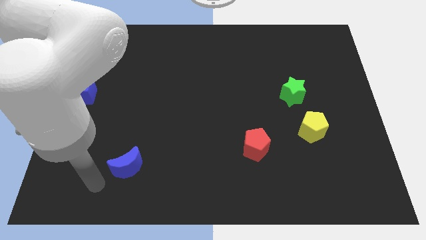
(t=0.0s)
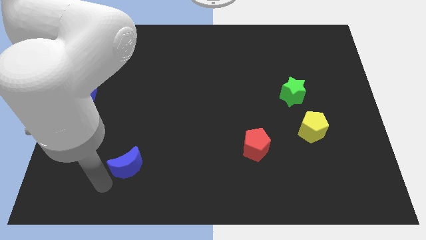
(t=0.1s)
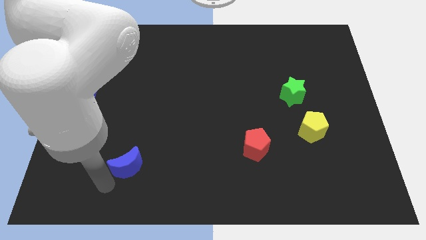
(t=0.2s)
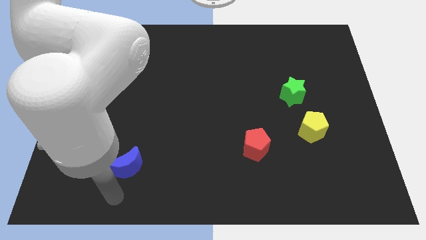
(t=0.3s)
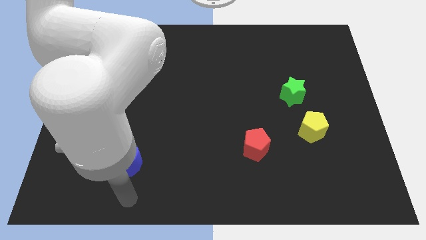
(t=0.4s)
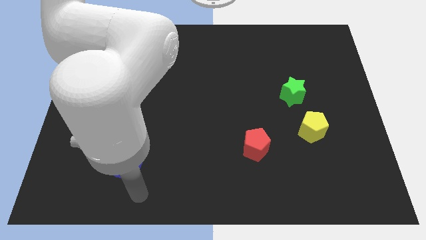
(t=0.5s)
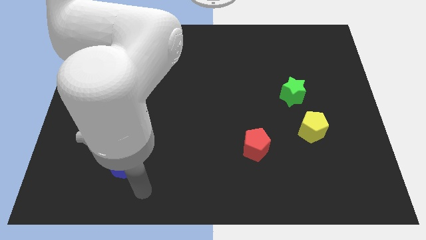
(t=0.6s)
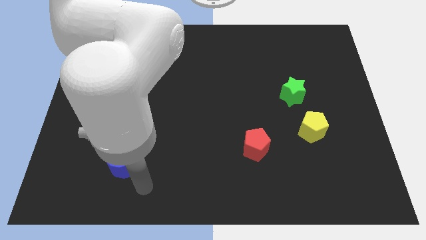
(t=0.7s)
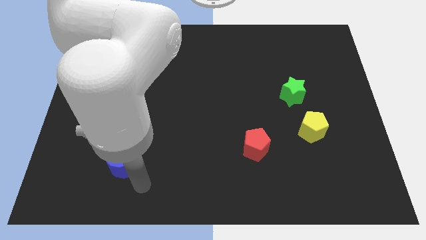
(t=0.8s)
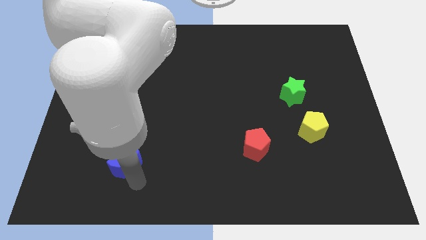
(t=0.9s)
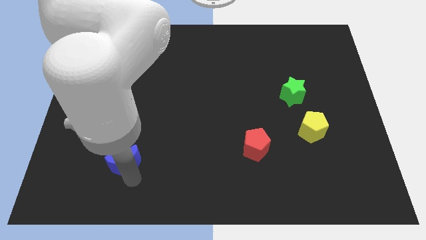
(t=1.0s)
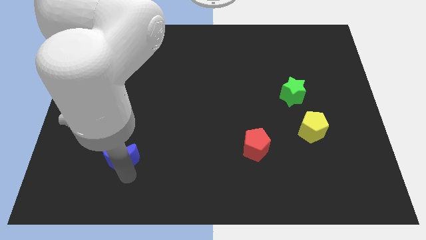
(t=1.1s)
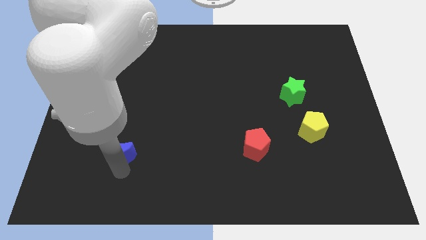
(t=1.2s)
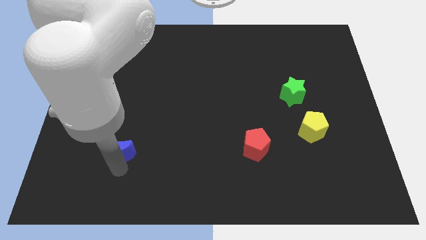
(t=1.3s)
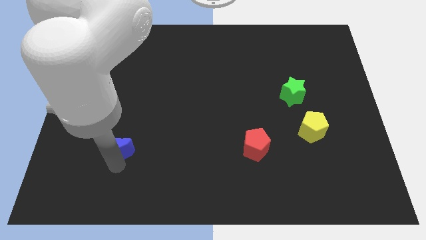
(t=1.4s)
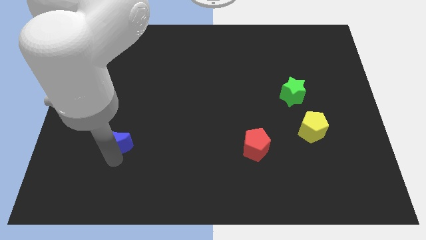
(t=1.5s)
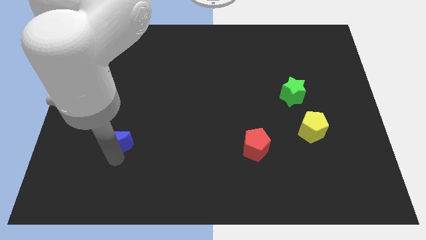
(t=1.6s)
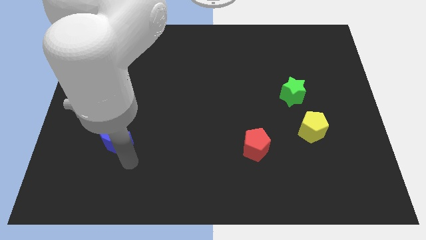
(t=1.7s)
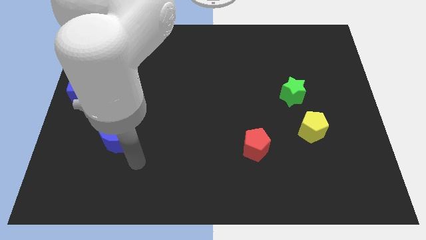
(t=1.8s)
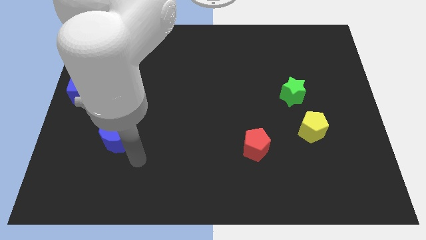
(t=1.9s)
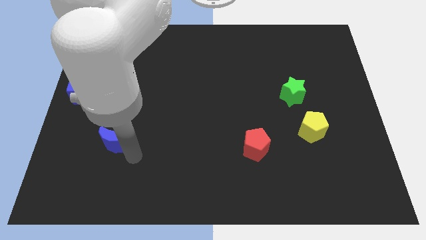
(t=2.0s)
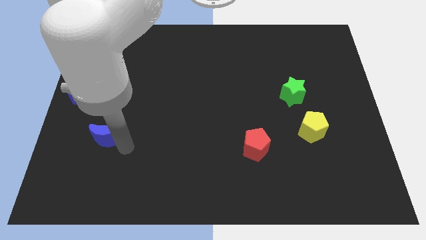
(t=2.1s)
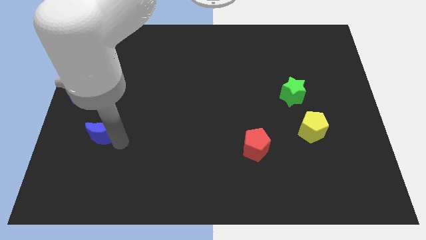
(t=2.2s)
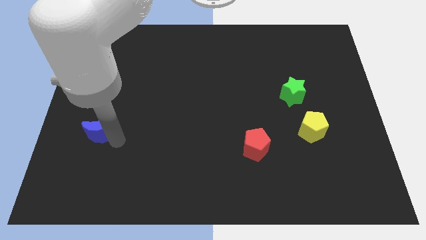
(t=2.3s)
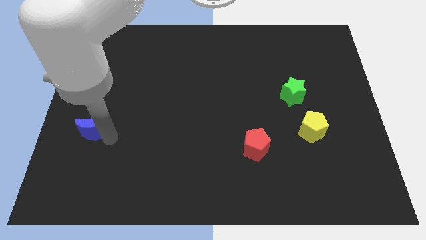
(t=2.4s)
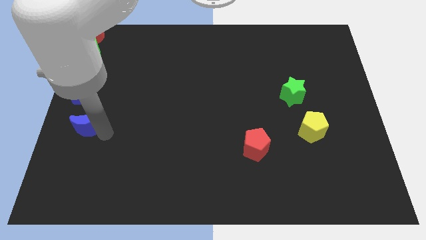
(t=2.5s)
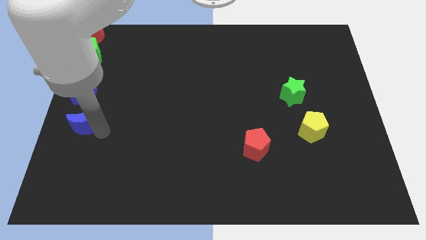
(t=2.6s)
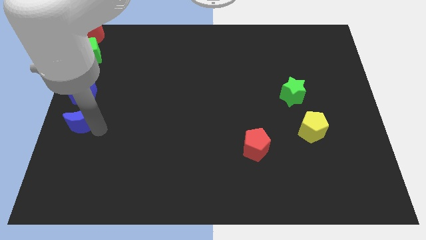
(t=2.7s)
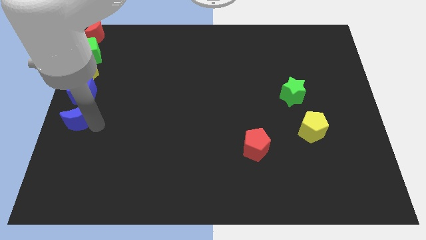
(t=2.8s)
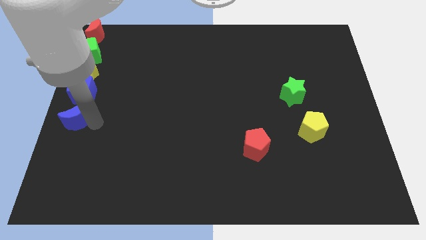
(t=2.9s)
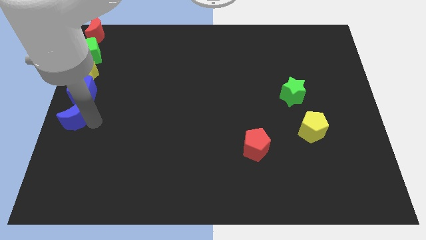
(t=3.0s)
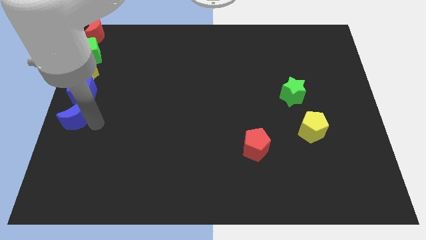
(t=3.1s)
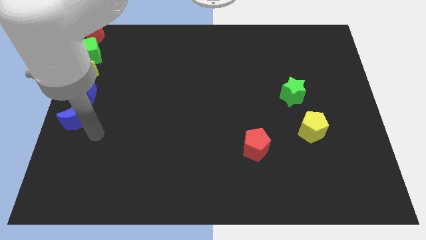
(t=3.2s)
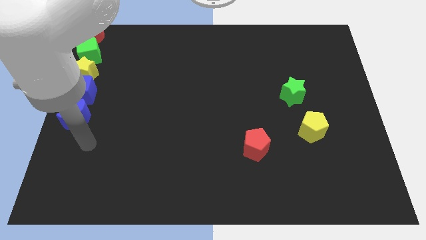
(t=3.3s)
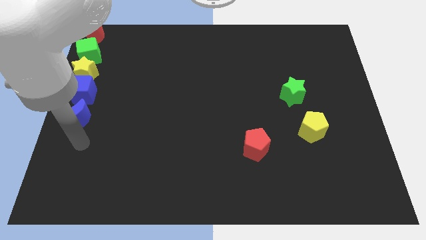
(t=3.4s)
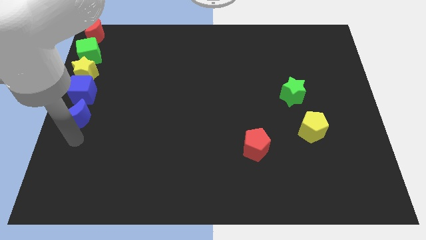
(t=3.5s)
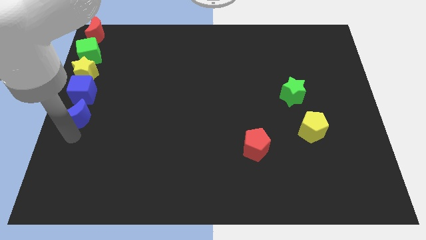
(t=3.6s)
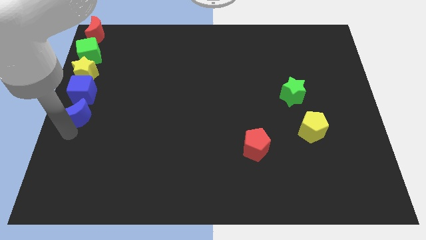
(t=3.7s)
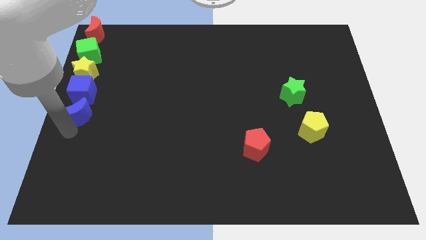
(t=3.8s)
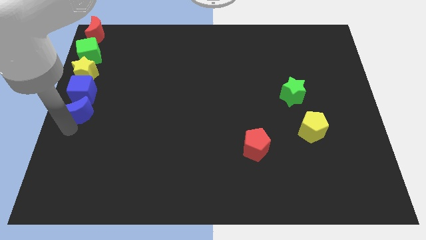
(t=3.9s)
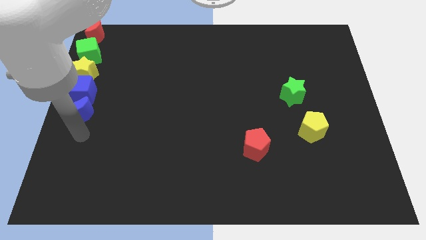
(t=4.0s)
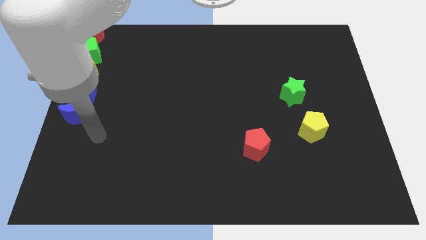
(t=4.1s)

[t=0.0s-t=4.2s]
place the blue moon below the blue cube

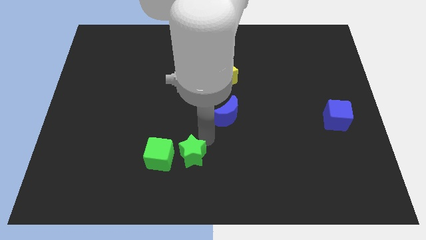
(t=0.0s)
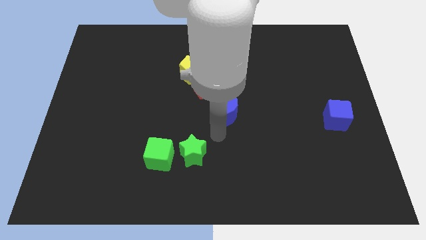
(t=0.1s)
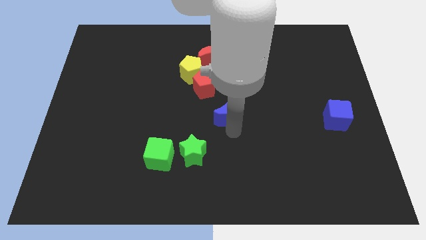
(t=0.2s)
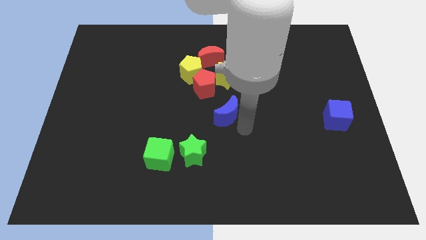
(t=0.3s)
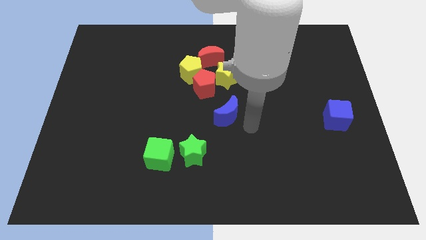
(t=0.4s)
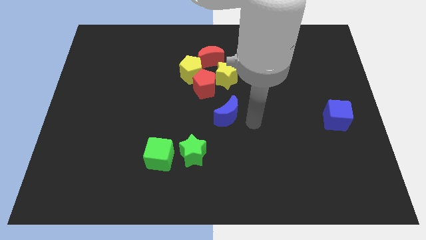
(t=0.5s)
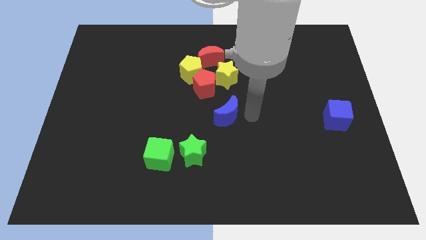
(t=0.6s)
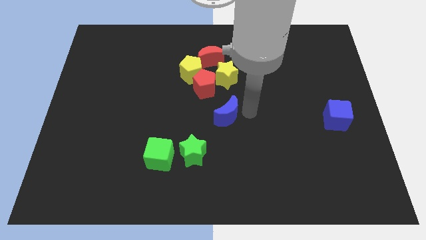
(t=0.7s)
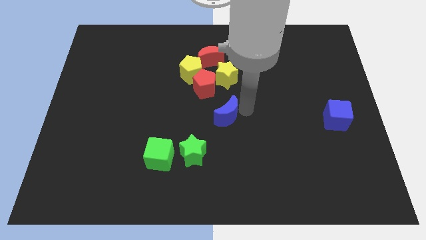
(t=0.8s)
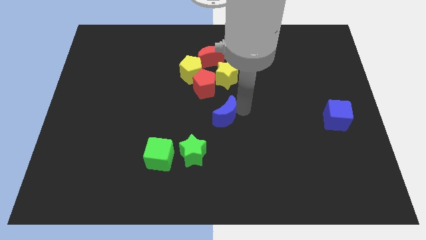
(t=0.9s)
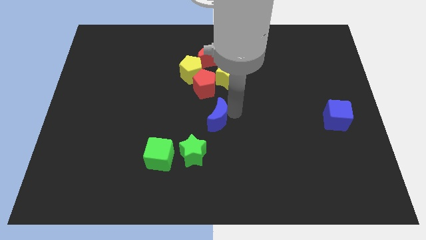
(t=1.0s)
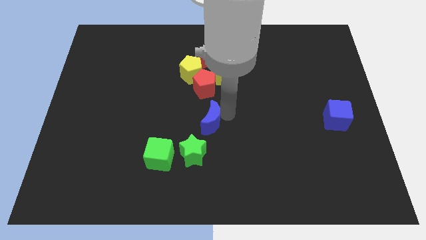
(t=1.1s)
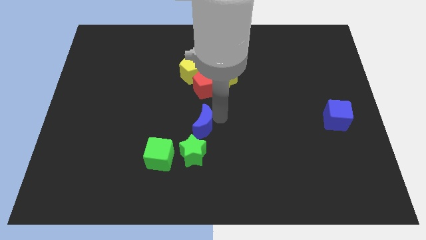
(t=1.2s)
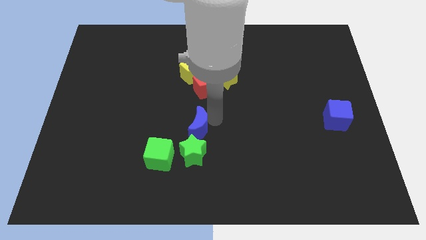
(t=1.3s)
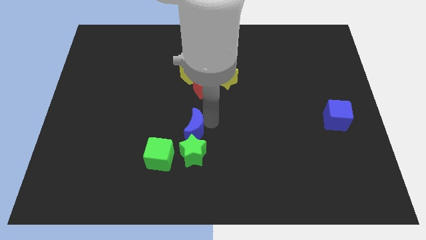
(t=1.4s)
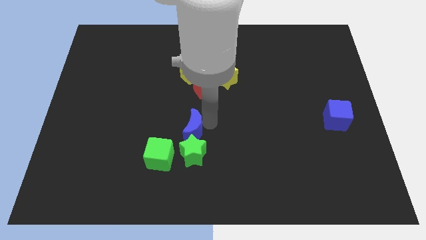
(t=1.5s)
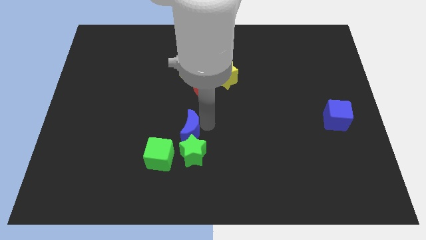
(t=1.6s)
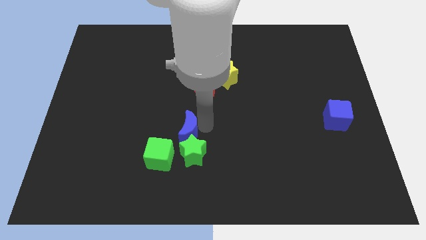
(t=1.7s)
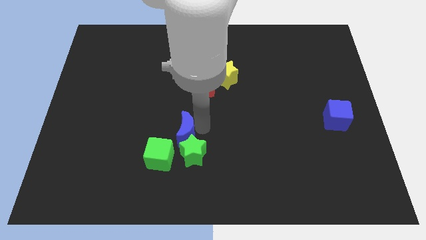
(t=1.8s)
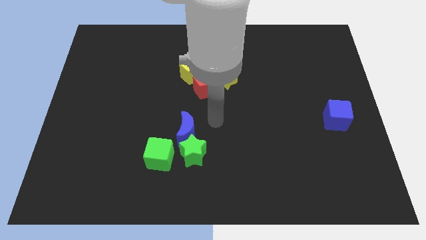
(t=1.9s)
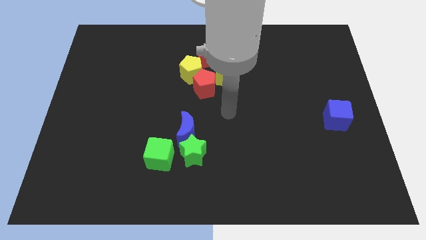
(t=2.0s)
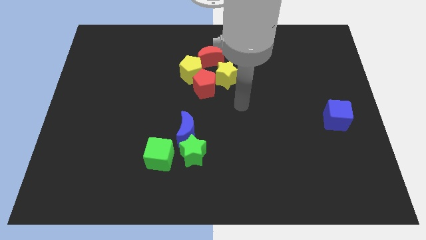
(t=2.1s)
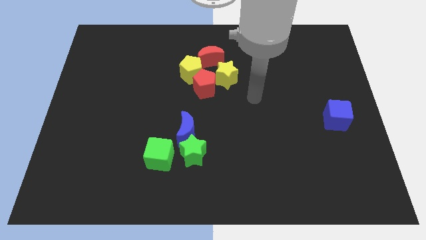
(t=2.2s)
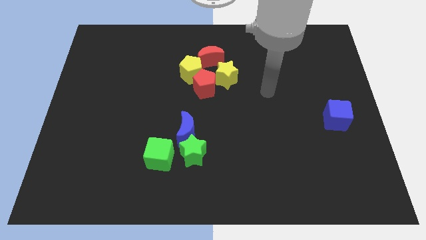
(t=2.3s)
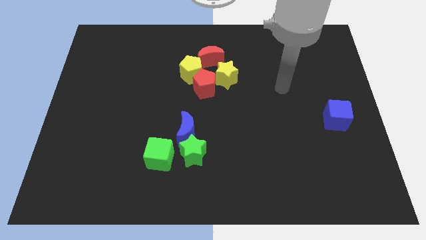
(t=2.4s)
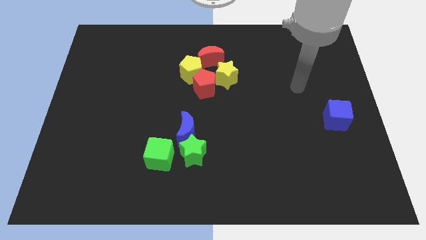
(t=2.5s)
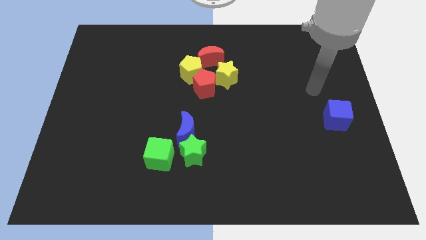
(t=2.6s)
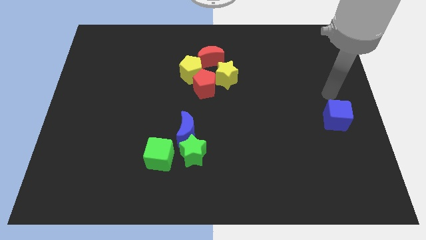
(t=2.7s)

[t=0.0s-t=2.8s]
drag the blue moon diagonally top left to green star

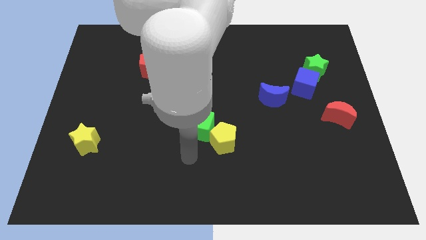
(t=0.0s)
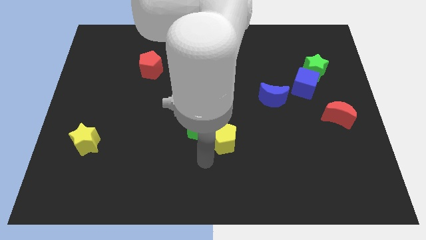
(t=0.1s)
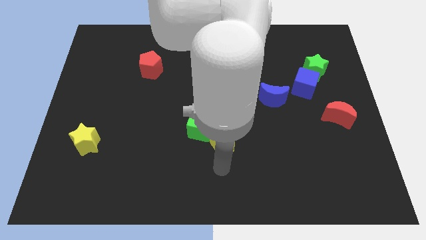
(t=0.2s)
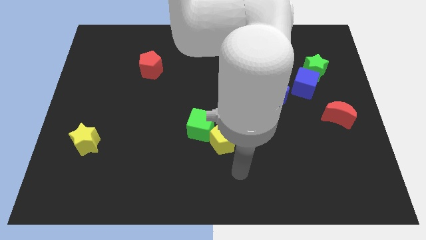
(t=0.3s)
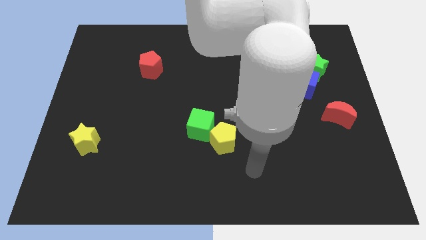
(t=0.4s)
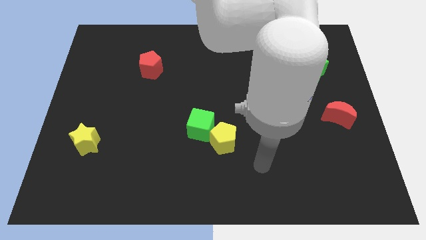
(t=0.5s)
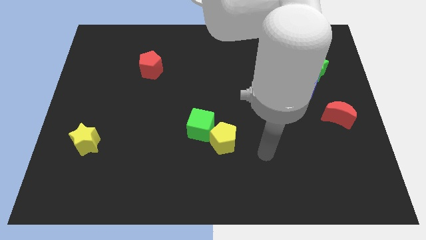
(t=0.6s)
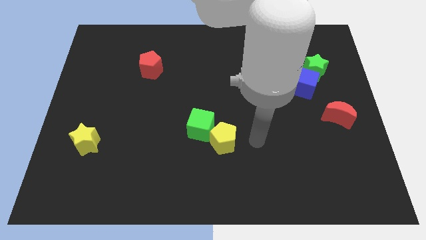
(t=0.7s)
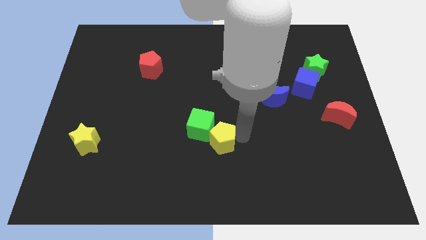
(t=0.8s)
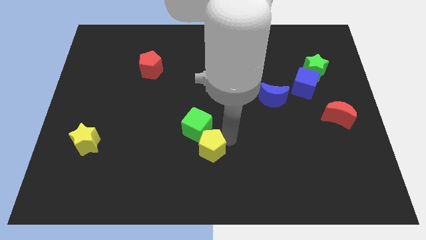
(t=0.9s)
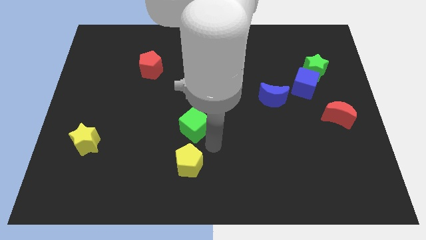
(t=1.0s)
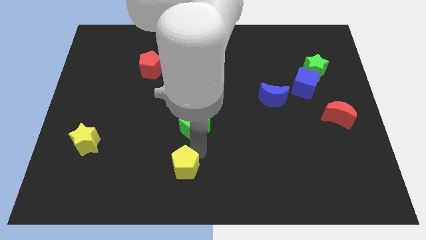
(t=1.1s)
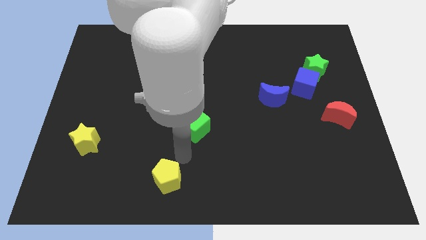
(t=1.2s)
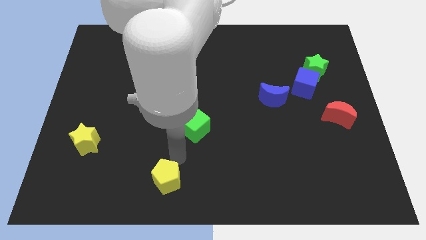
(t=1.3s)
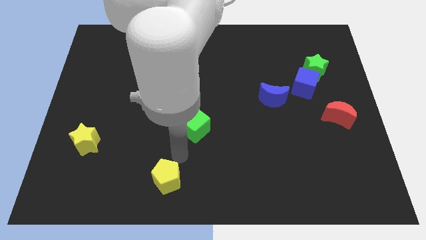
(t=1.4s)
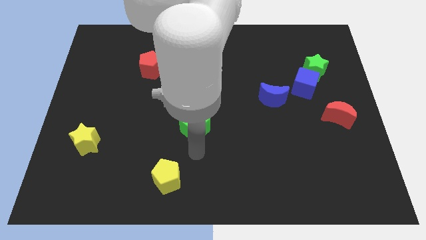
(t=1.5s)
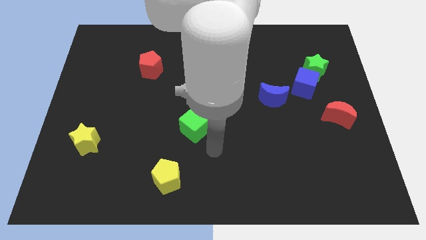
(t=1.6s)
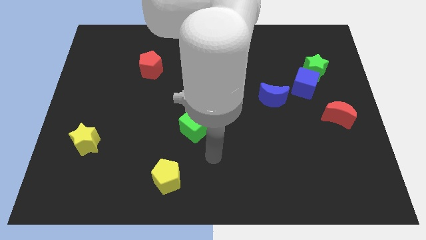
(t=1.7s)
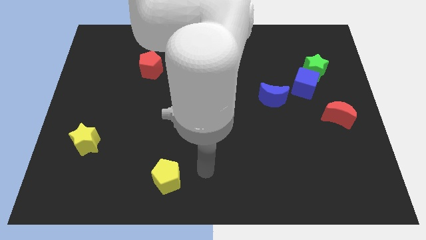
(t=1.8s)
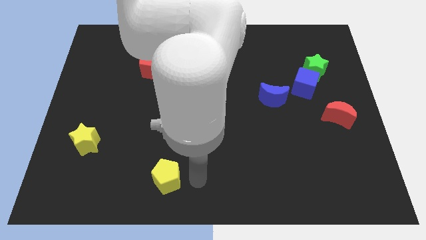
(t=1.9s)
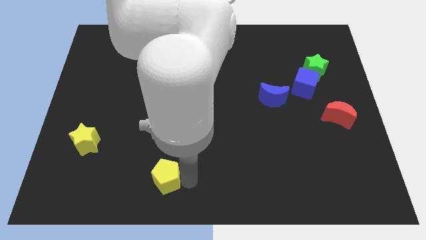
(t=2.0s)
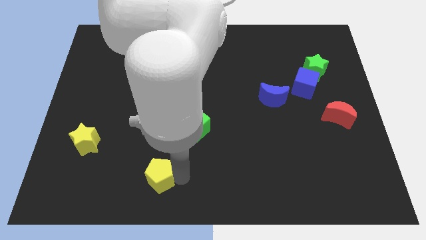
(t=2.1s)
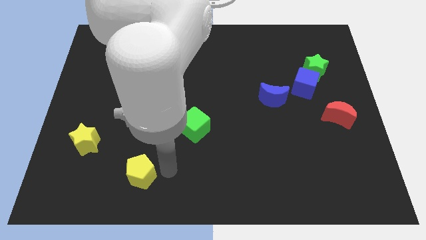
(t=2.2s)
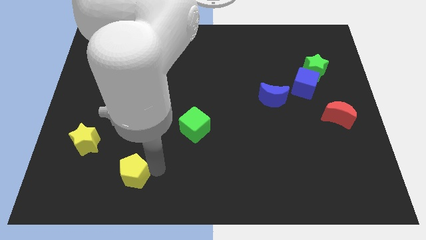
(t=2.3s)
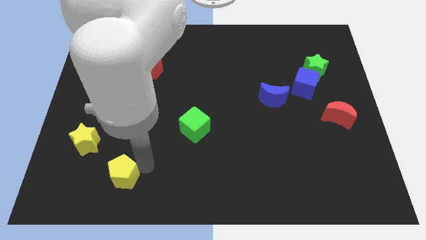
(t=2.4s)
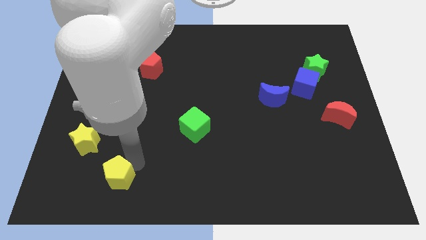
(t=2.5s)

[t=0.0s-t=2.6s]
move the yellow pentagon to the bottom of the red pentagon
